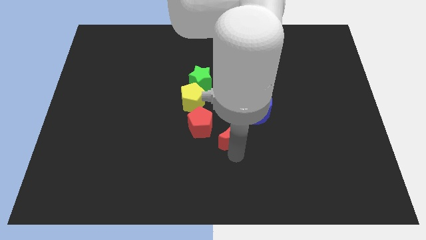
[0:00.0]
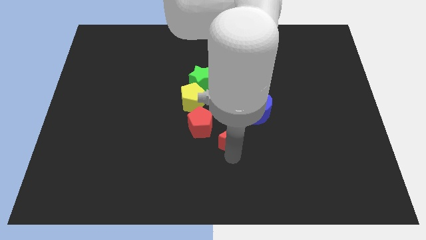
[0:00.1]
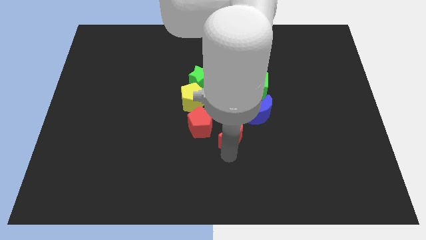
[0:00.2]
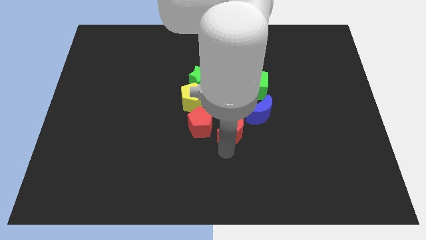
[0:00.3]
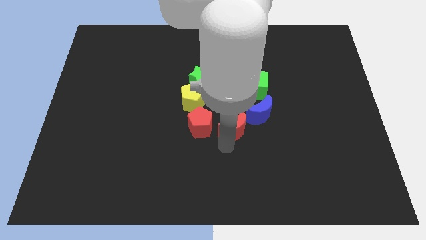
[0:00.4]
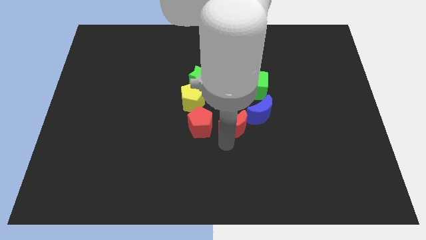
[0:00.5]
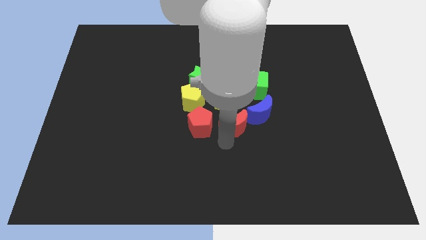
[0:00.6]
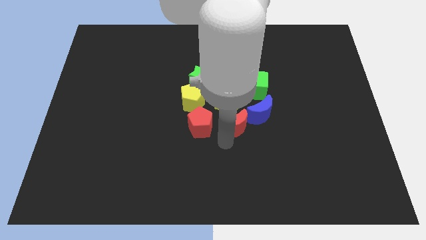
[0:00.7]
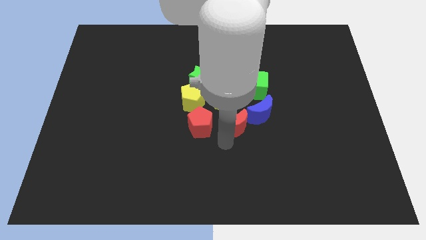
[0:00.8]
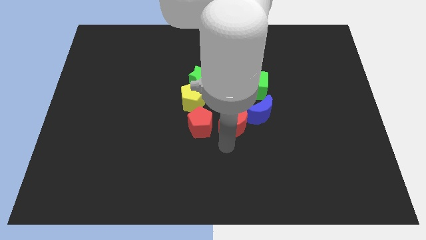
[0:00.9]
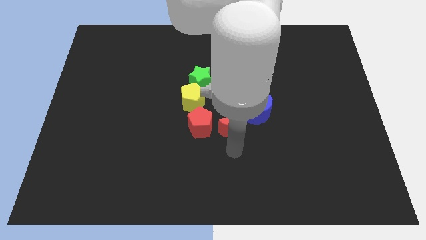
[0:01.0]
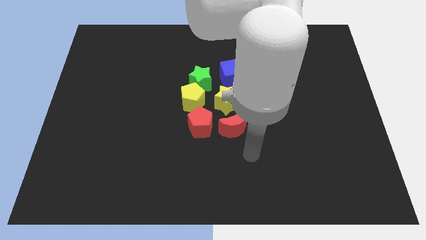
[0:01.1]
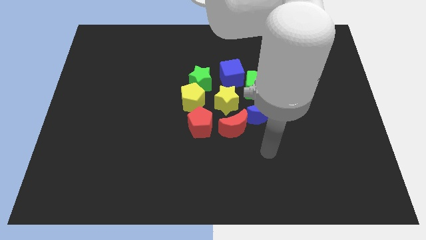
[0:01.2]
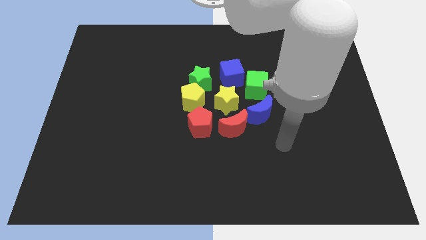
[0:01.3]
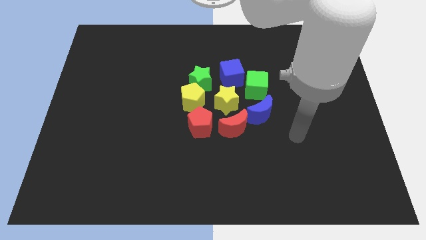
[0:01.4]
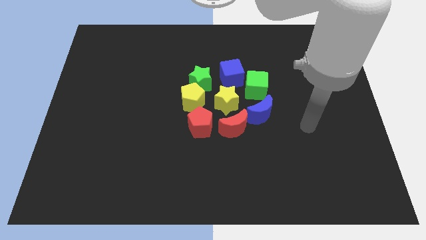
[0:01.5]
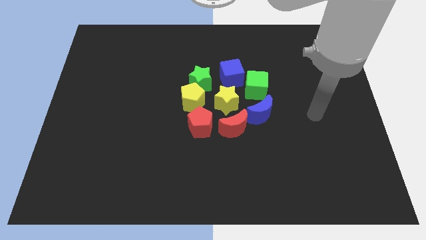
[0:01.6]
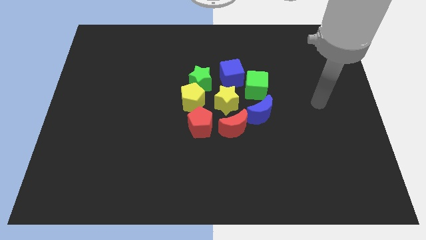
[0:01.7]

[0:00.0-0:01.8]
push the red crescent towards the group of blocks

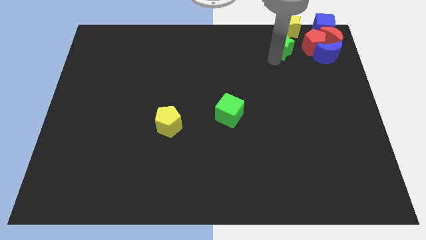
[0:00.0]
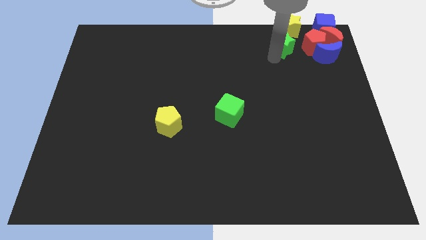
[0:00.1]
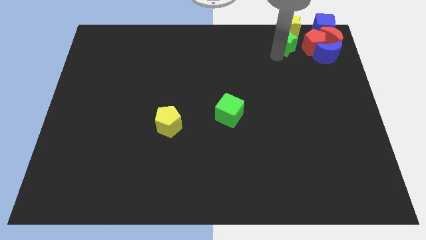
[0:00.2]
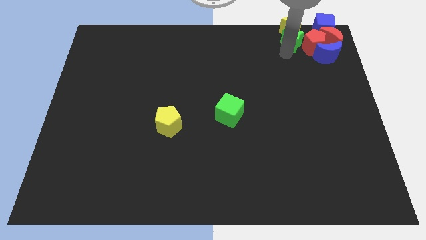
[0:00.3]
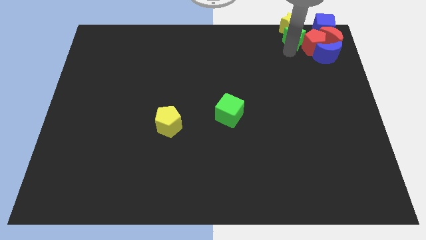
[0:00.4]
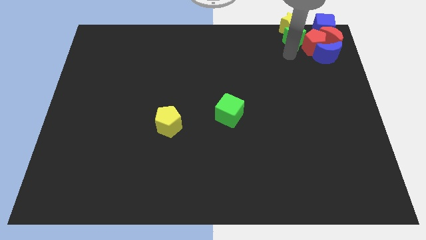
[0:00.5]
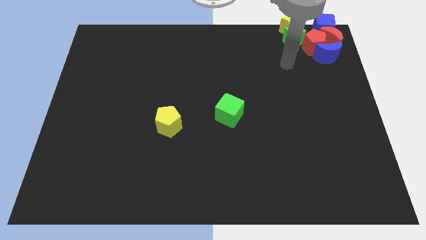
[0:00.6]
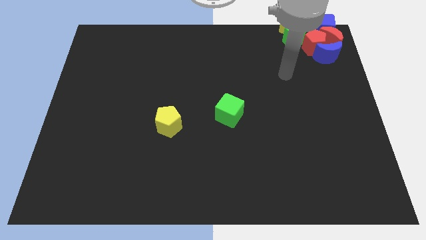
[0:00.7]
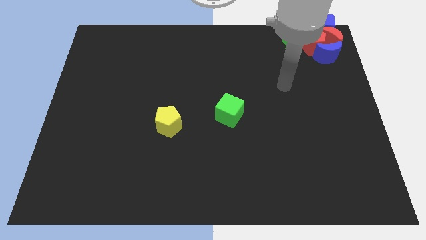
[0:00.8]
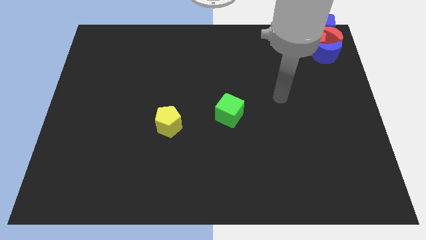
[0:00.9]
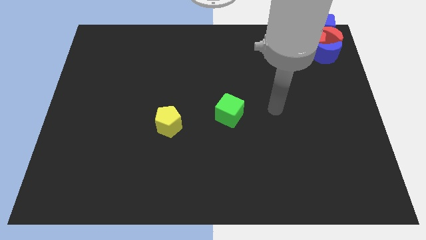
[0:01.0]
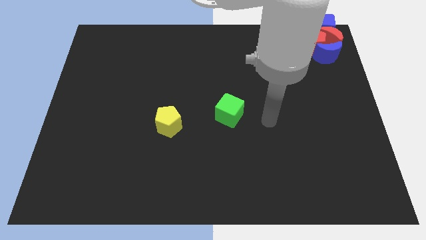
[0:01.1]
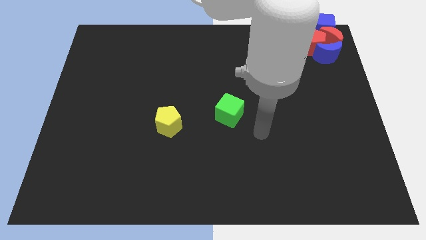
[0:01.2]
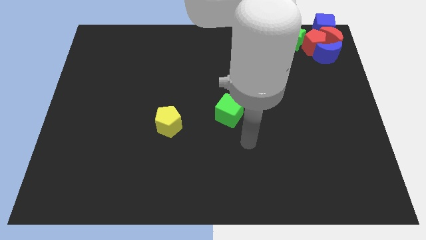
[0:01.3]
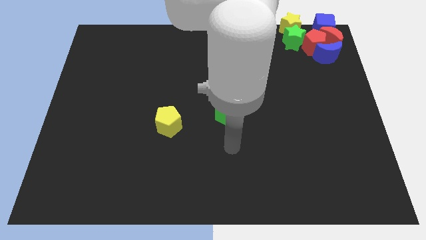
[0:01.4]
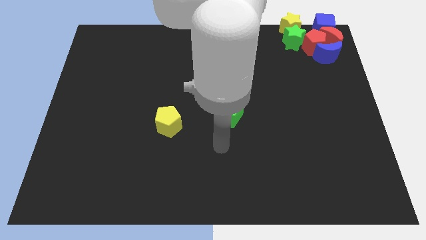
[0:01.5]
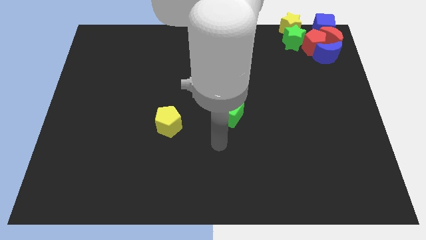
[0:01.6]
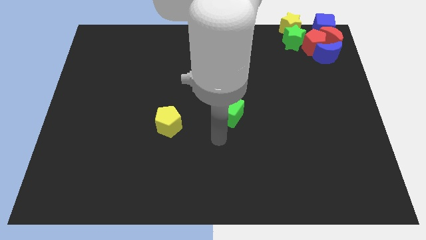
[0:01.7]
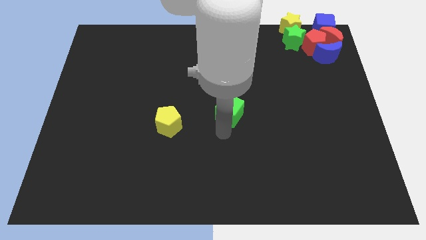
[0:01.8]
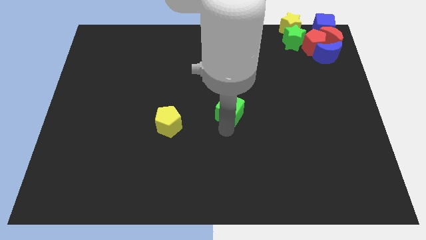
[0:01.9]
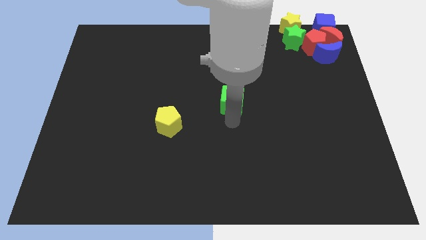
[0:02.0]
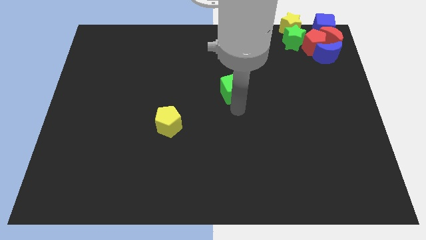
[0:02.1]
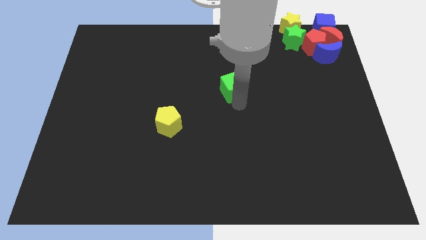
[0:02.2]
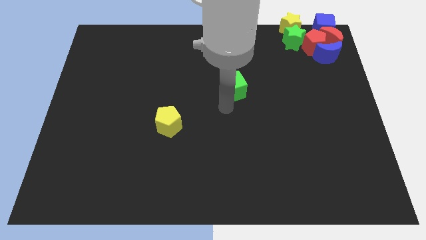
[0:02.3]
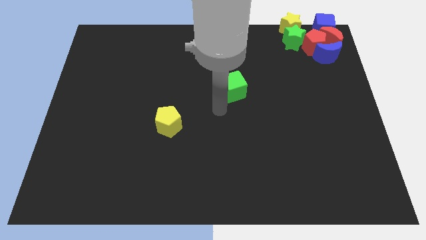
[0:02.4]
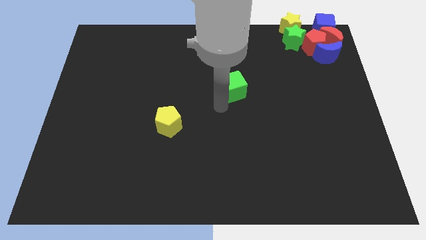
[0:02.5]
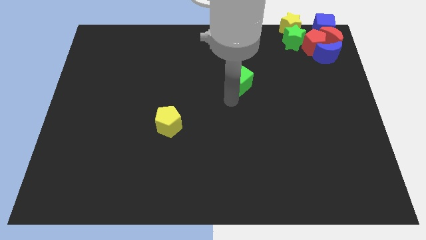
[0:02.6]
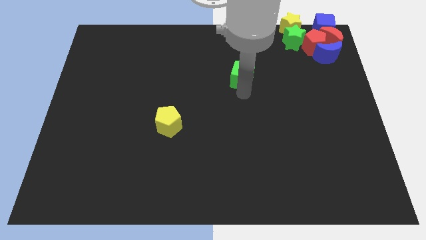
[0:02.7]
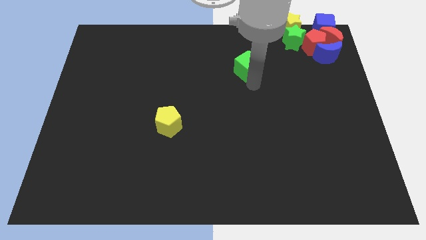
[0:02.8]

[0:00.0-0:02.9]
move green cube towards the group of blocks

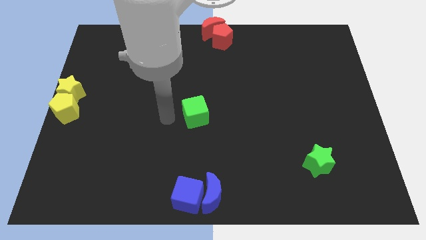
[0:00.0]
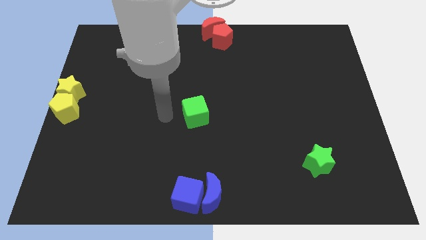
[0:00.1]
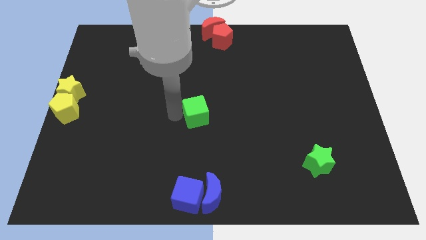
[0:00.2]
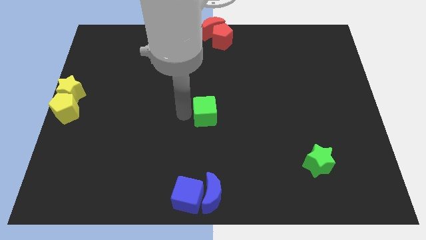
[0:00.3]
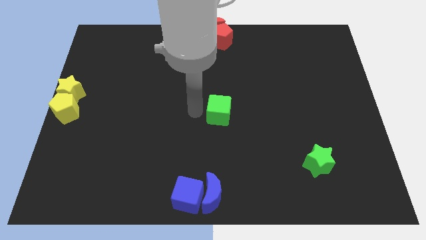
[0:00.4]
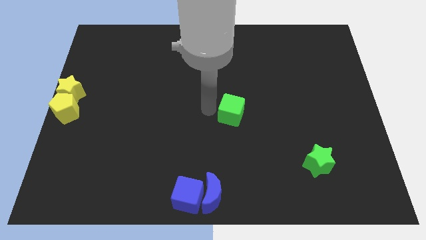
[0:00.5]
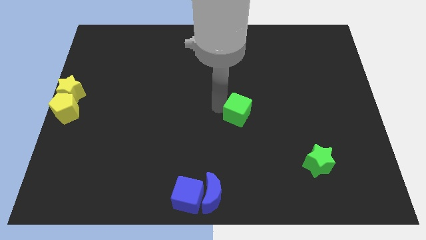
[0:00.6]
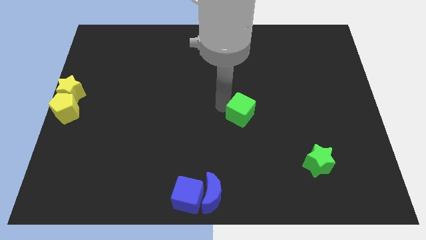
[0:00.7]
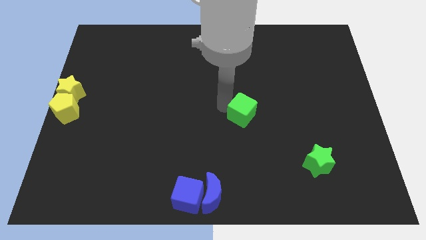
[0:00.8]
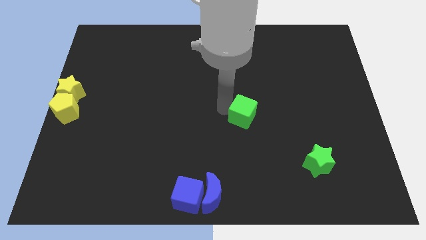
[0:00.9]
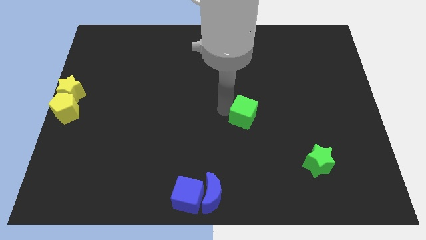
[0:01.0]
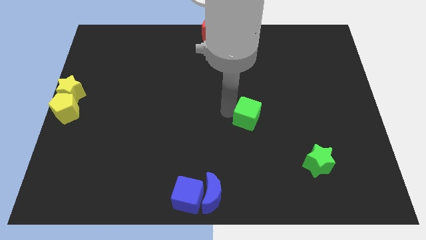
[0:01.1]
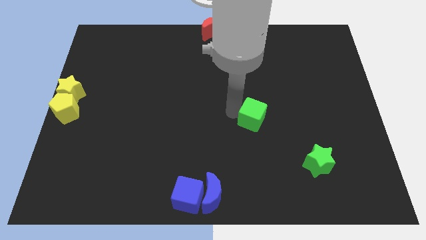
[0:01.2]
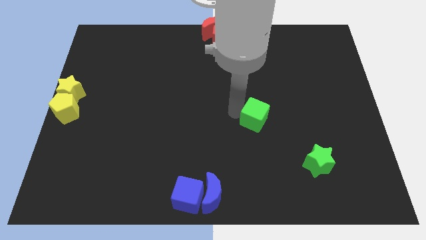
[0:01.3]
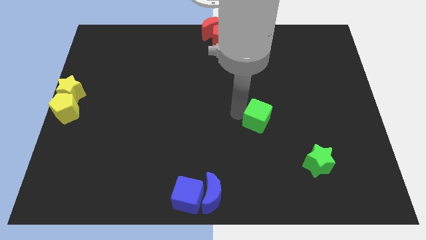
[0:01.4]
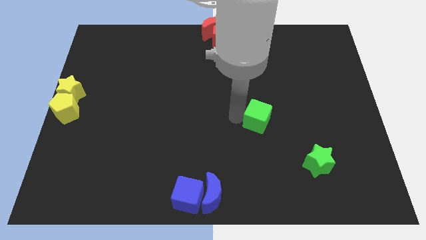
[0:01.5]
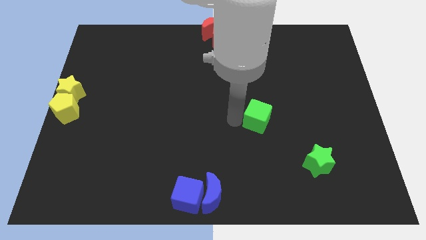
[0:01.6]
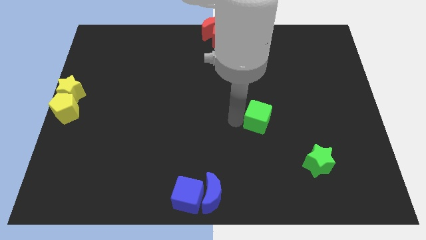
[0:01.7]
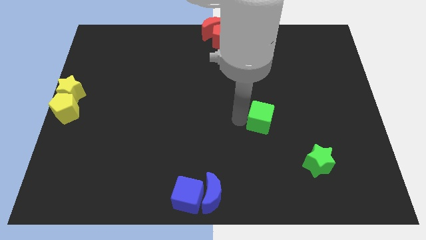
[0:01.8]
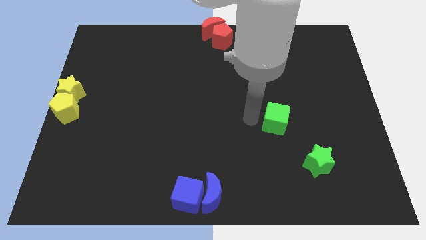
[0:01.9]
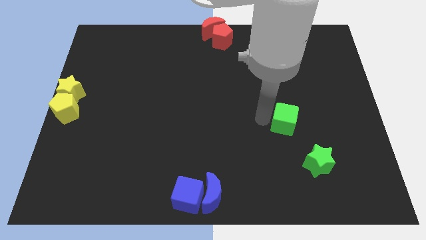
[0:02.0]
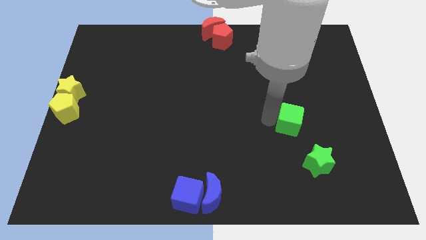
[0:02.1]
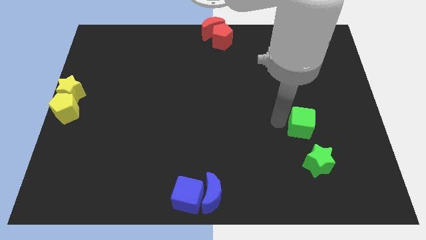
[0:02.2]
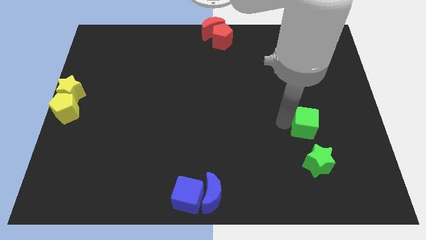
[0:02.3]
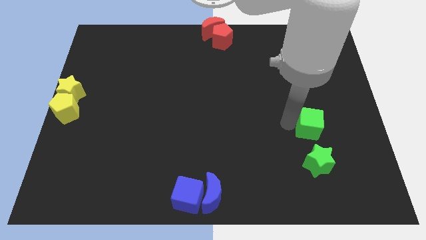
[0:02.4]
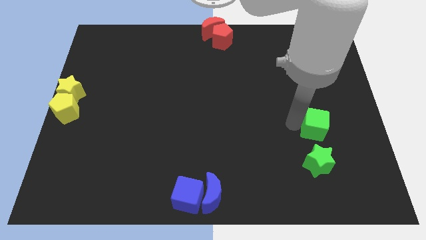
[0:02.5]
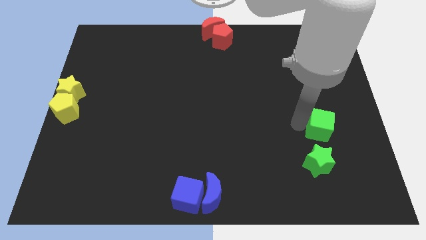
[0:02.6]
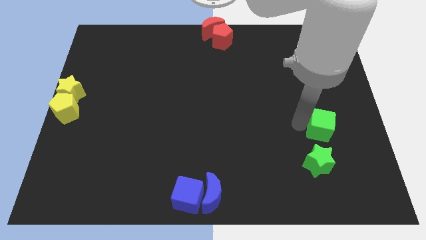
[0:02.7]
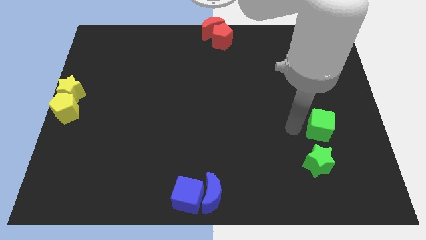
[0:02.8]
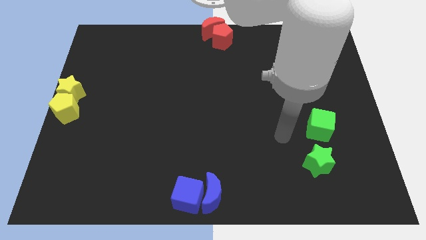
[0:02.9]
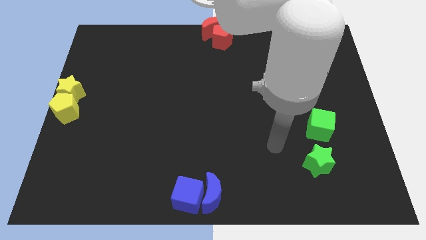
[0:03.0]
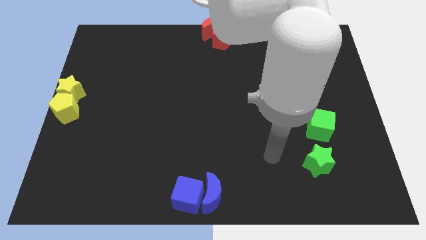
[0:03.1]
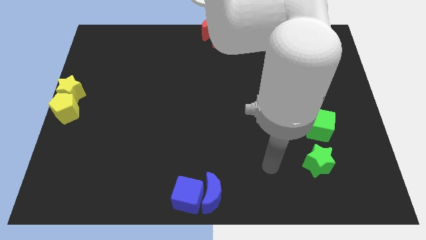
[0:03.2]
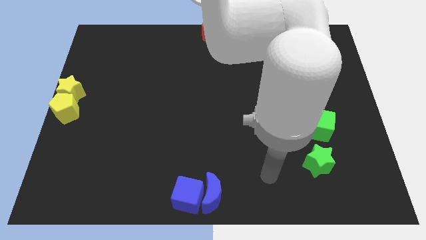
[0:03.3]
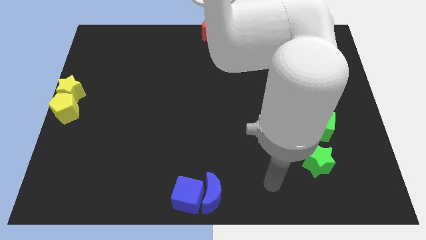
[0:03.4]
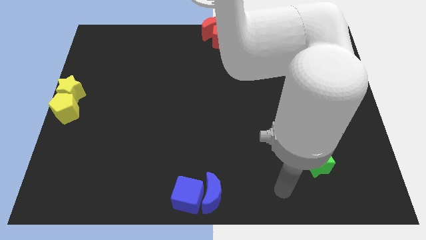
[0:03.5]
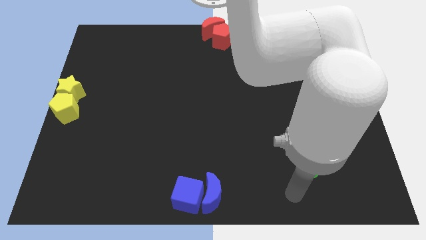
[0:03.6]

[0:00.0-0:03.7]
place the green cube above the green star

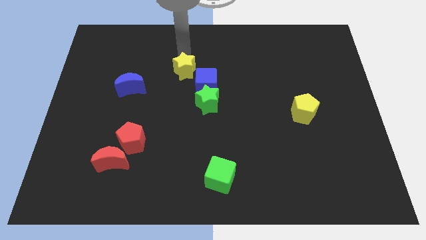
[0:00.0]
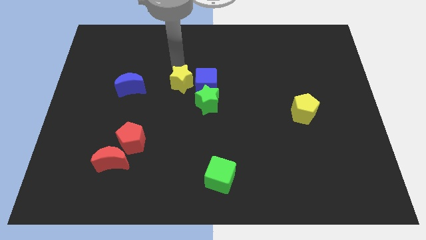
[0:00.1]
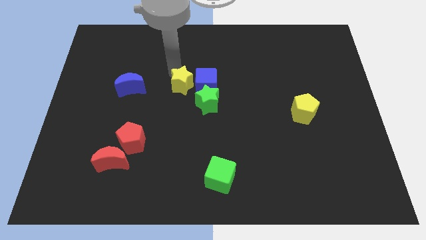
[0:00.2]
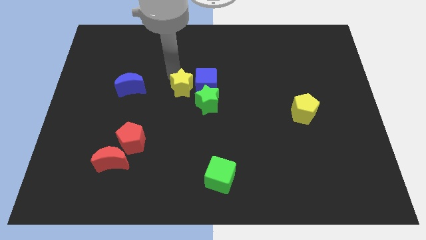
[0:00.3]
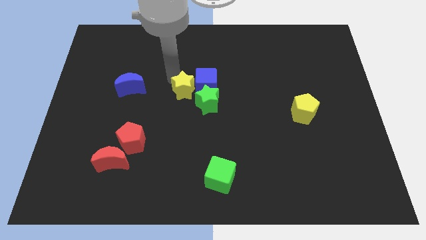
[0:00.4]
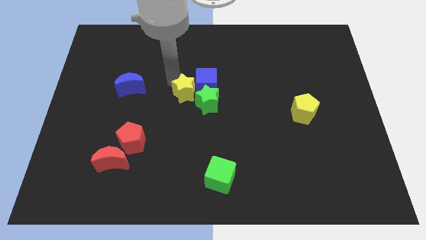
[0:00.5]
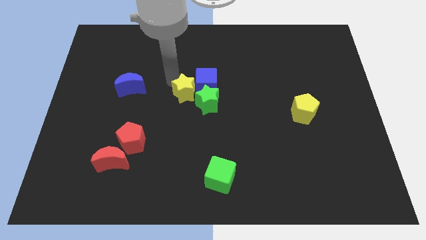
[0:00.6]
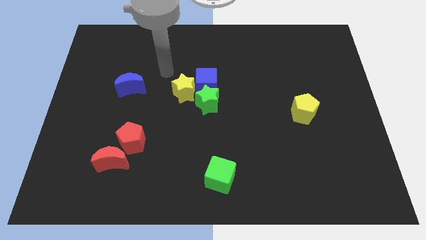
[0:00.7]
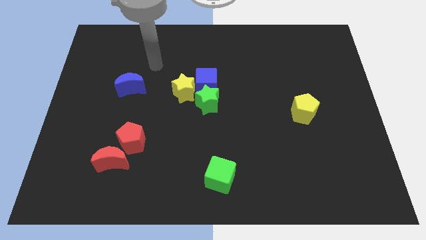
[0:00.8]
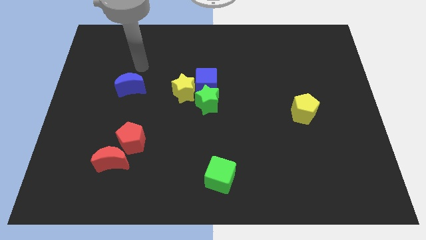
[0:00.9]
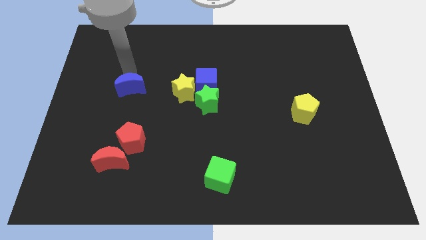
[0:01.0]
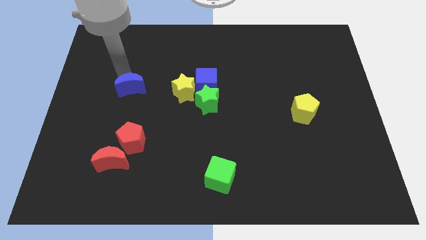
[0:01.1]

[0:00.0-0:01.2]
push yellow start above green star
